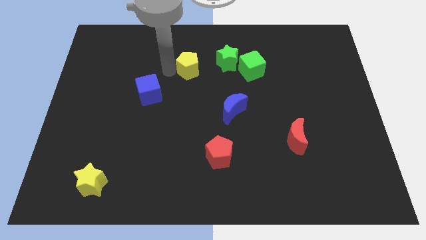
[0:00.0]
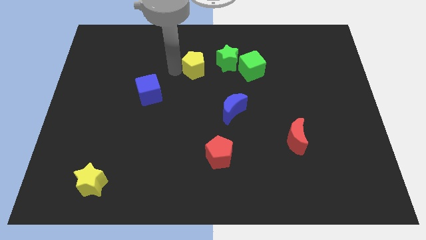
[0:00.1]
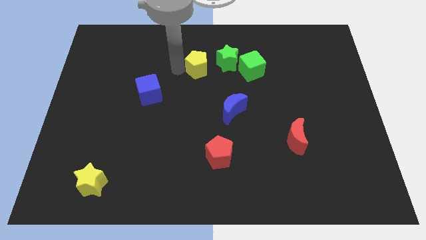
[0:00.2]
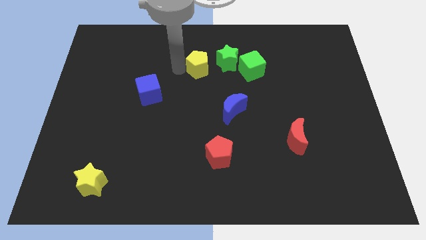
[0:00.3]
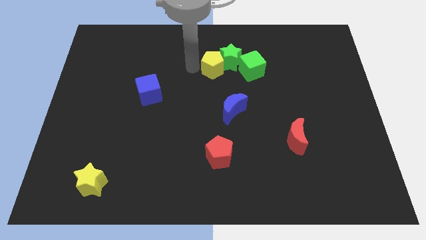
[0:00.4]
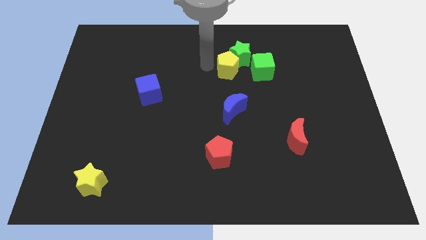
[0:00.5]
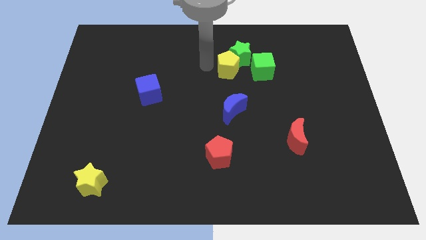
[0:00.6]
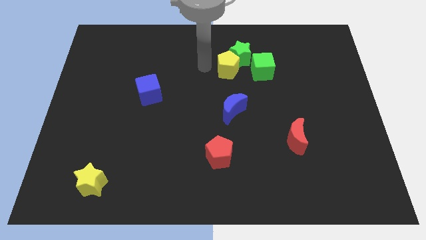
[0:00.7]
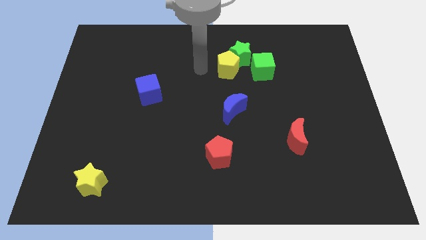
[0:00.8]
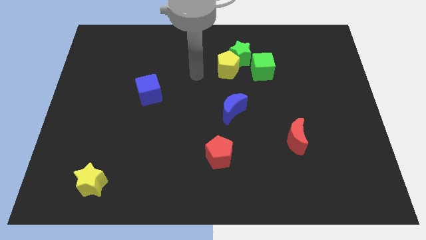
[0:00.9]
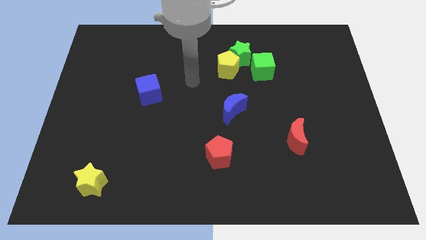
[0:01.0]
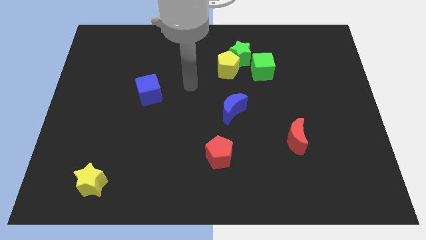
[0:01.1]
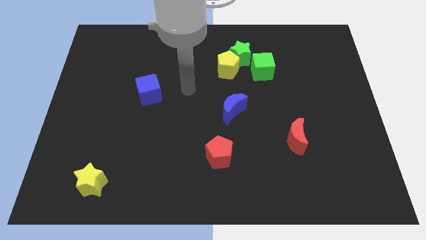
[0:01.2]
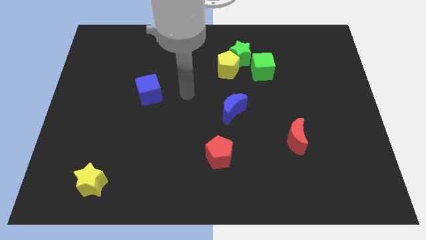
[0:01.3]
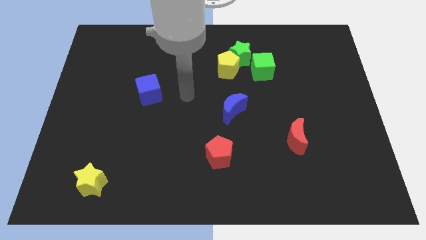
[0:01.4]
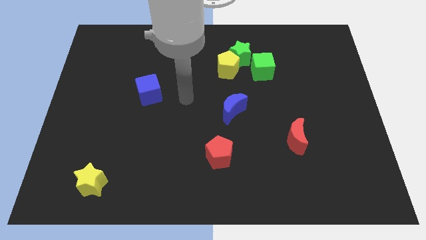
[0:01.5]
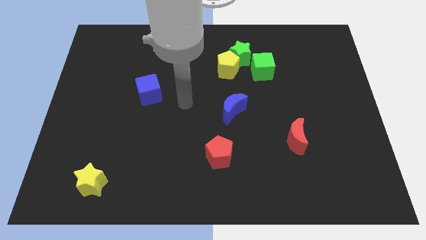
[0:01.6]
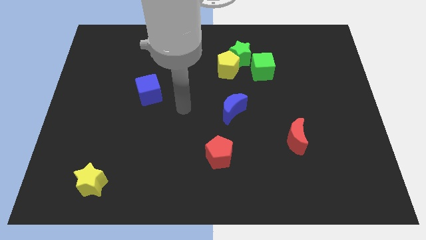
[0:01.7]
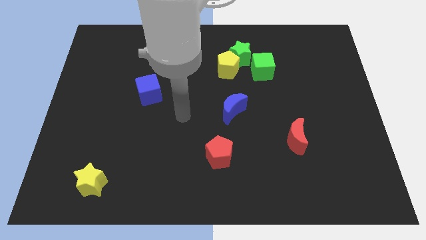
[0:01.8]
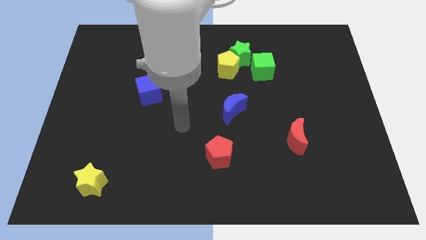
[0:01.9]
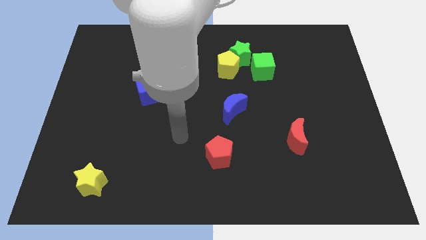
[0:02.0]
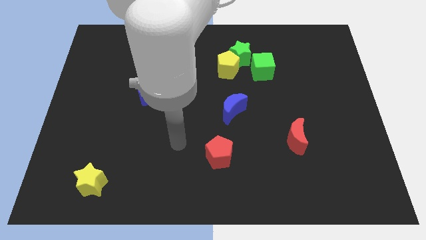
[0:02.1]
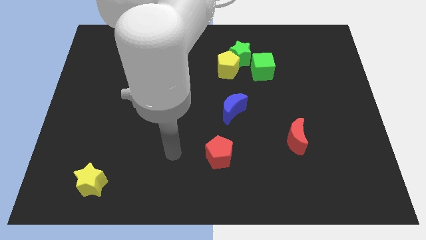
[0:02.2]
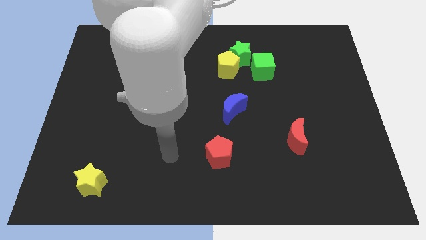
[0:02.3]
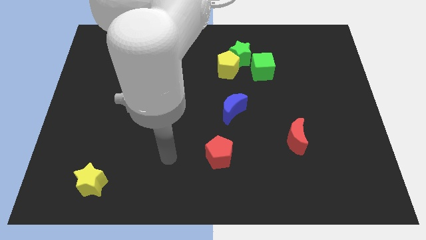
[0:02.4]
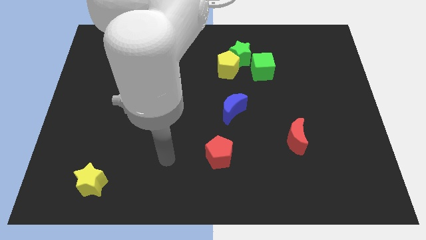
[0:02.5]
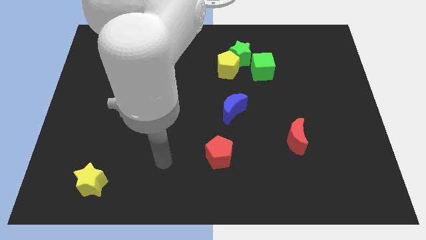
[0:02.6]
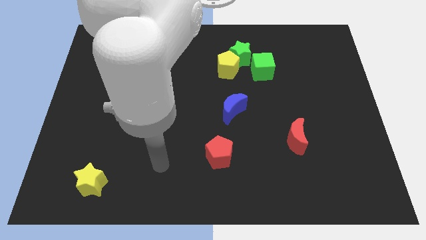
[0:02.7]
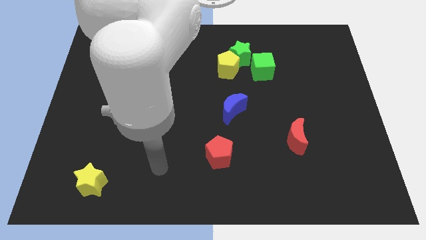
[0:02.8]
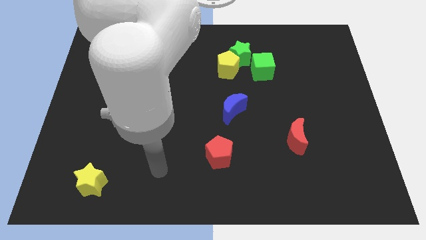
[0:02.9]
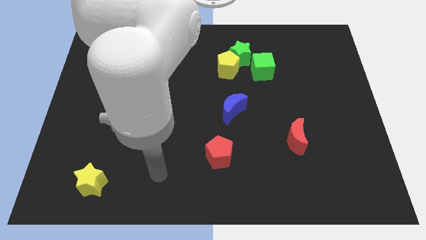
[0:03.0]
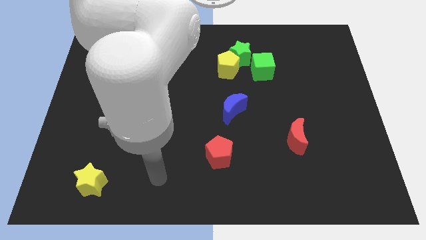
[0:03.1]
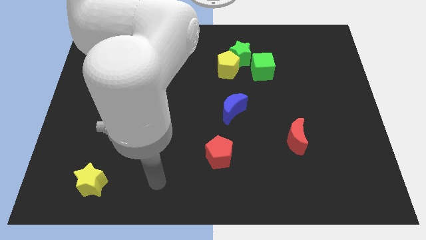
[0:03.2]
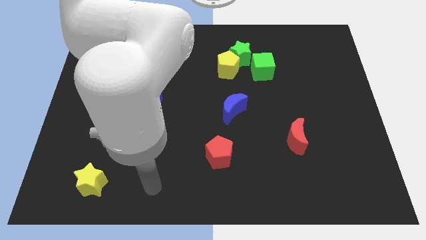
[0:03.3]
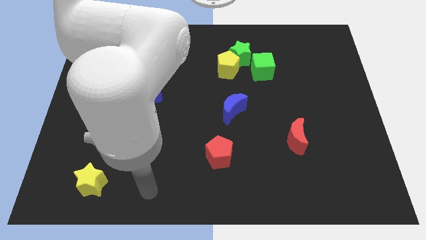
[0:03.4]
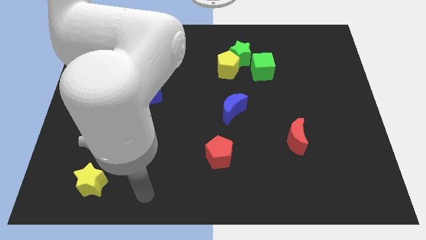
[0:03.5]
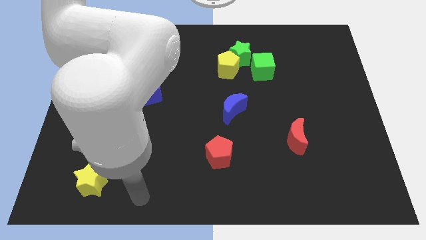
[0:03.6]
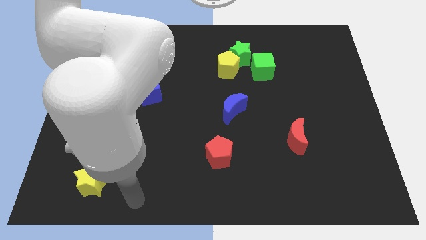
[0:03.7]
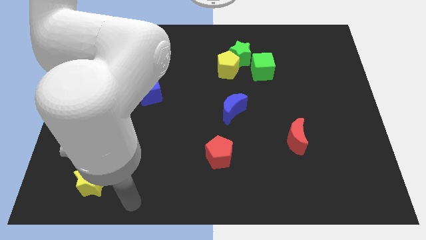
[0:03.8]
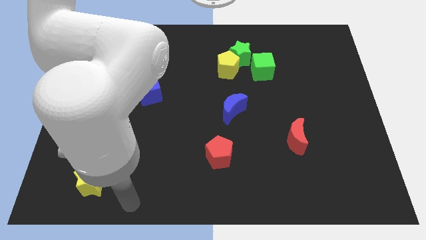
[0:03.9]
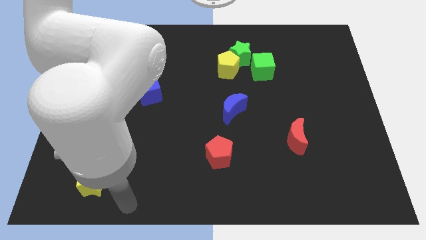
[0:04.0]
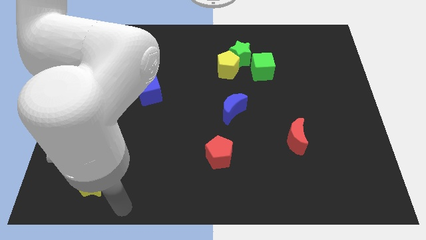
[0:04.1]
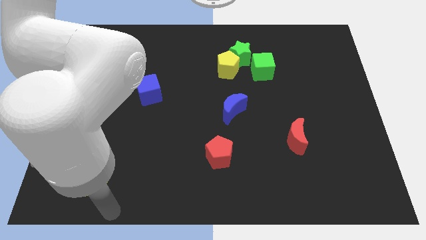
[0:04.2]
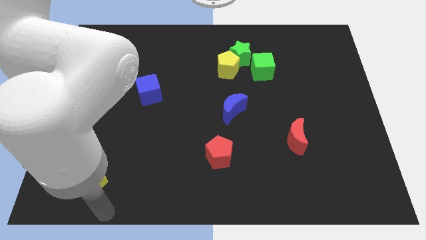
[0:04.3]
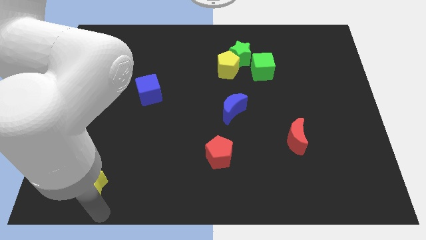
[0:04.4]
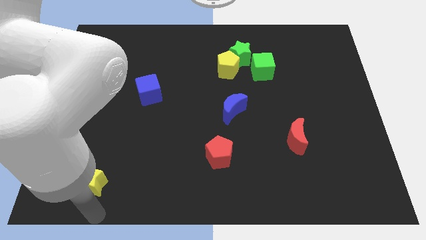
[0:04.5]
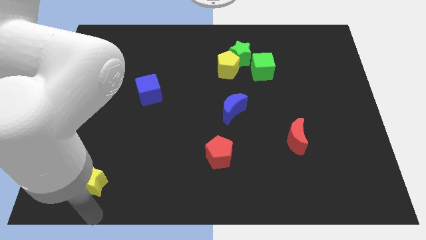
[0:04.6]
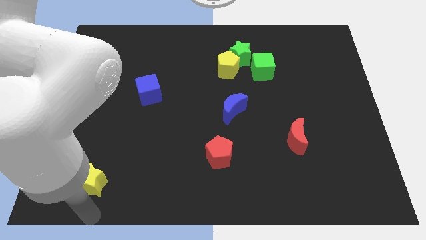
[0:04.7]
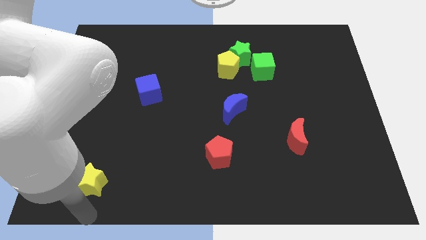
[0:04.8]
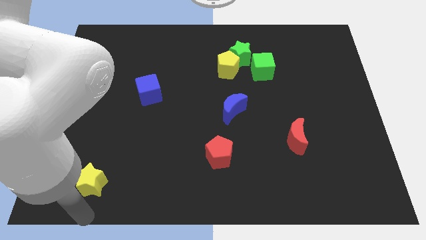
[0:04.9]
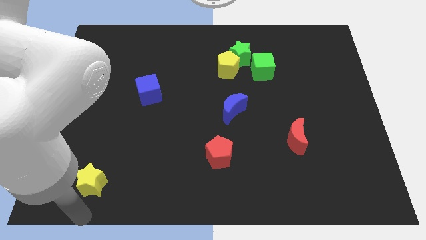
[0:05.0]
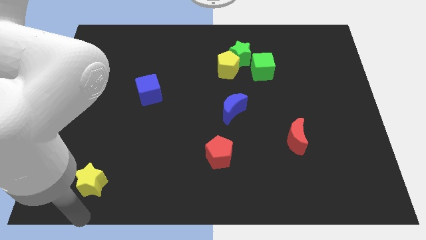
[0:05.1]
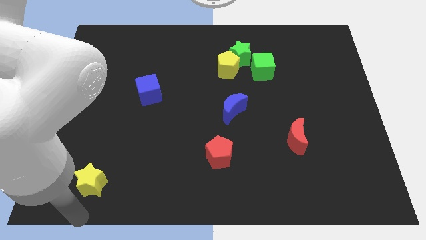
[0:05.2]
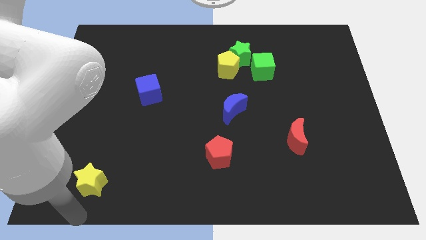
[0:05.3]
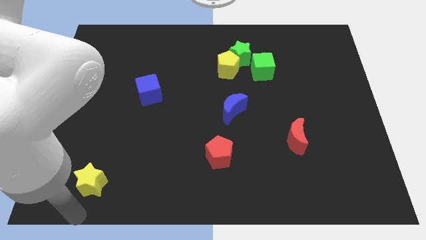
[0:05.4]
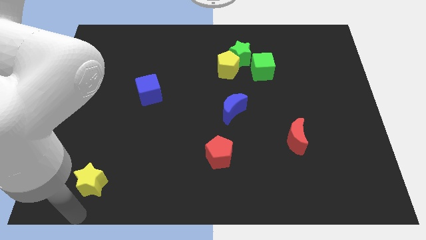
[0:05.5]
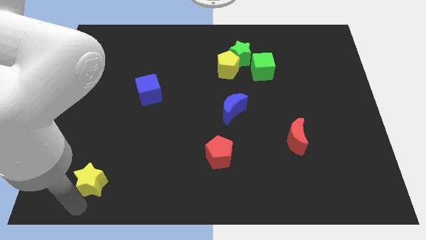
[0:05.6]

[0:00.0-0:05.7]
push the yellow pentagon into the green star and green cube

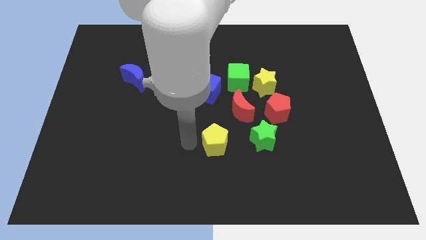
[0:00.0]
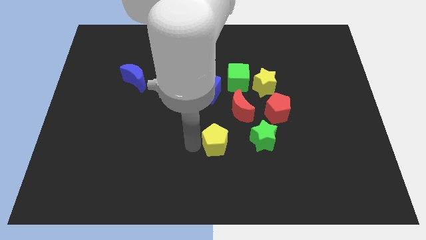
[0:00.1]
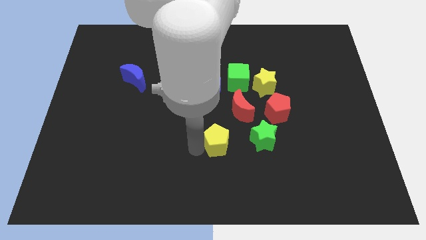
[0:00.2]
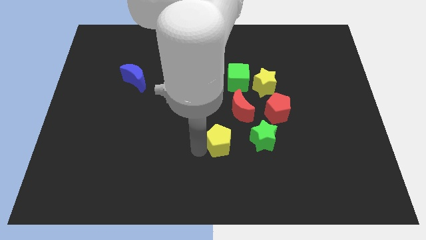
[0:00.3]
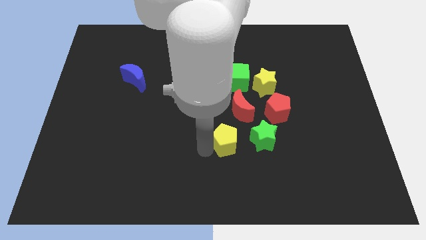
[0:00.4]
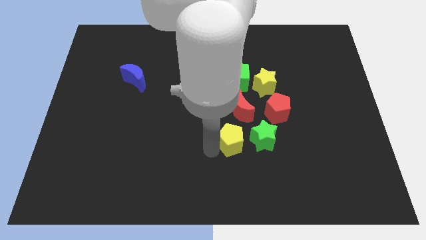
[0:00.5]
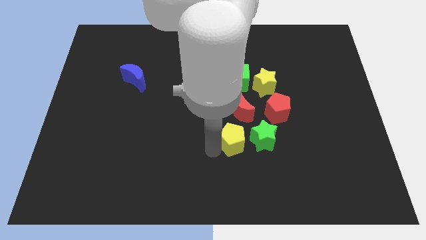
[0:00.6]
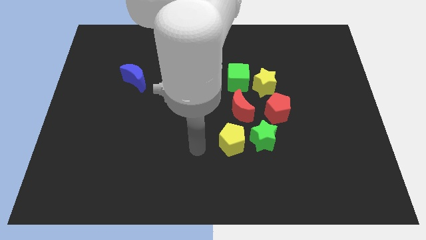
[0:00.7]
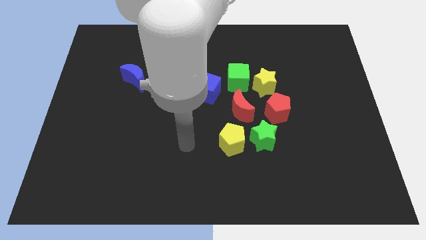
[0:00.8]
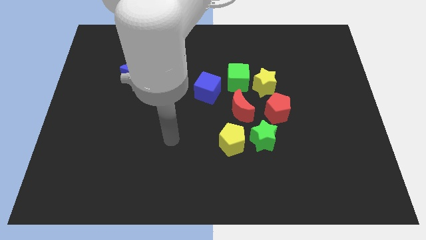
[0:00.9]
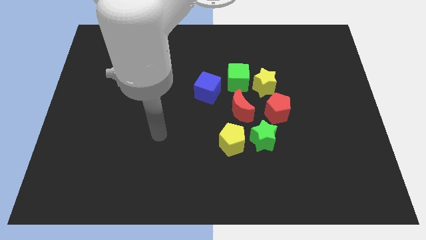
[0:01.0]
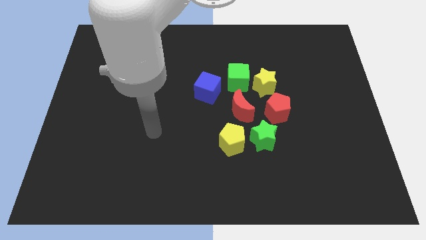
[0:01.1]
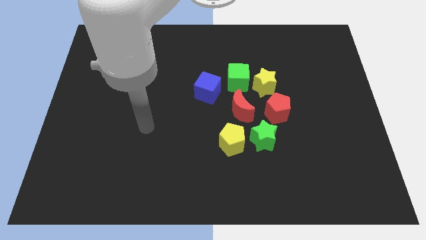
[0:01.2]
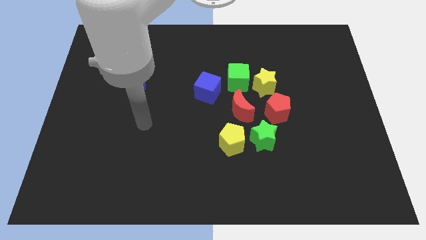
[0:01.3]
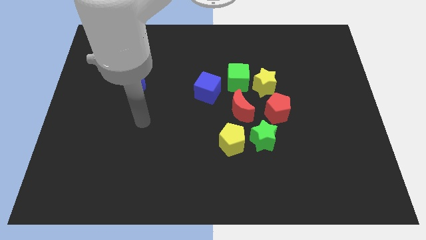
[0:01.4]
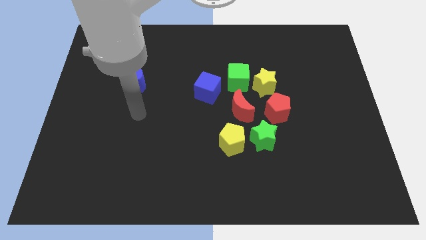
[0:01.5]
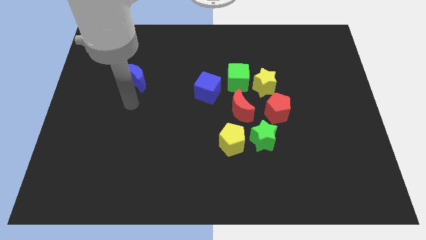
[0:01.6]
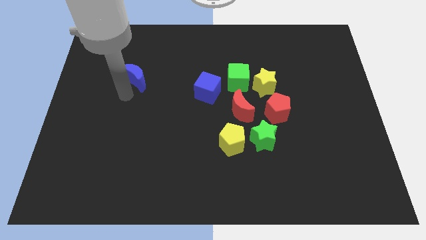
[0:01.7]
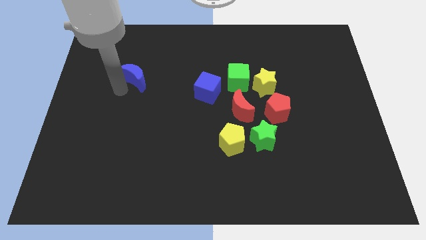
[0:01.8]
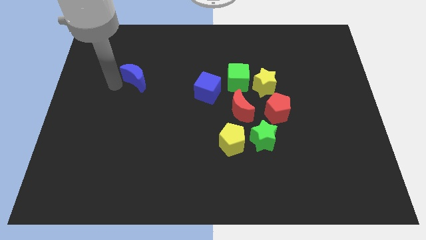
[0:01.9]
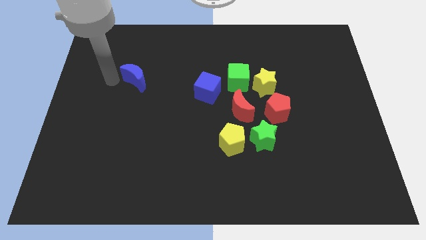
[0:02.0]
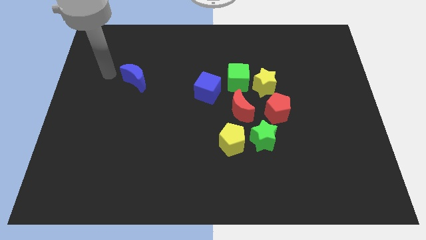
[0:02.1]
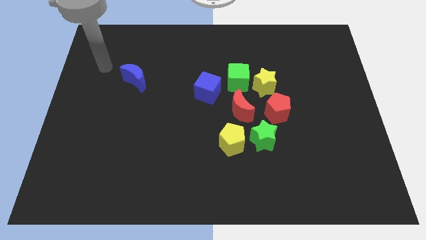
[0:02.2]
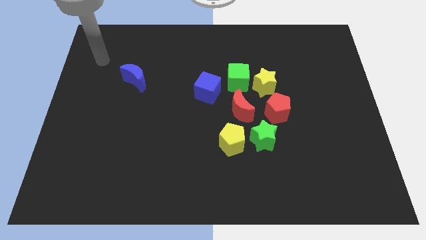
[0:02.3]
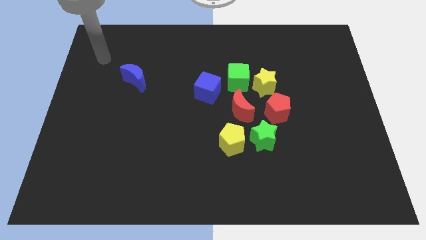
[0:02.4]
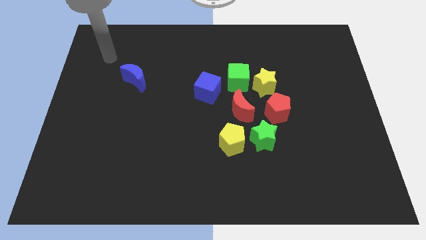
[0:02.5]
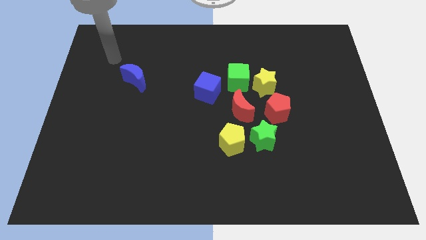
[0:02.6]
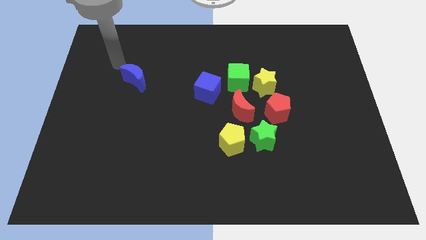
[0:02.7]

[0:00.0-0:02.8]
push the yellow pentagon towards the of the green star

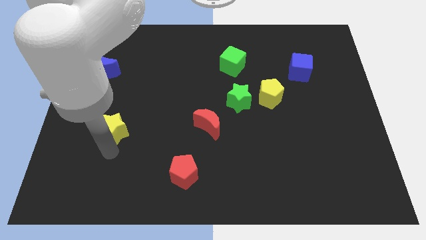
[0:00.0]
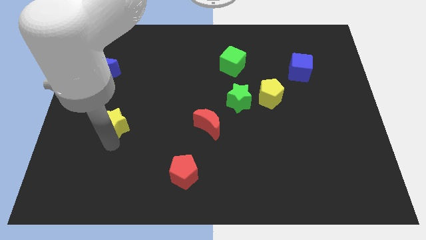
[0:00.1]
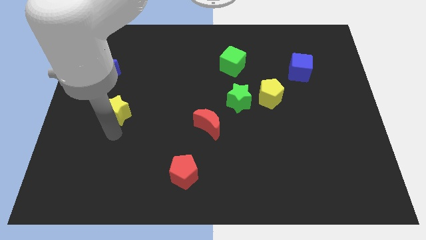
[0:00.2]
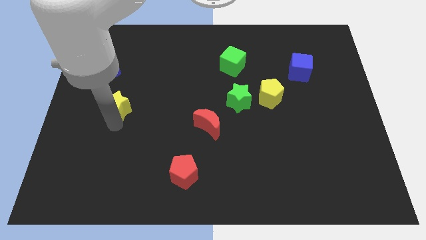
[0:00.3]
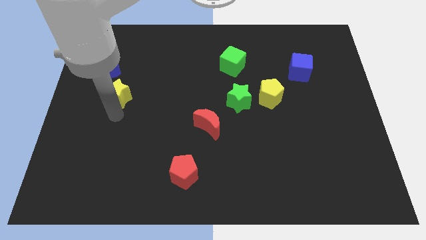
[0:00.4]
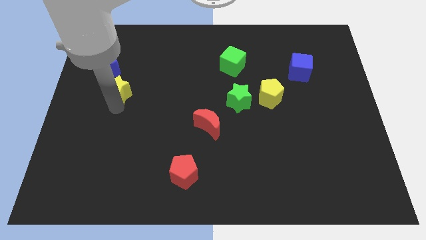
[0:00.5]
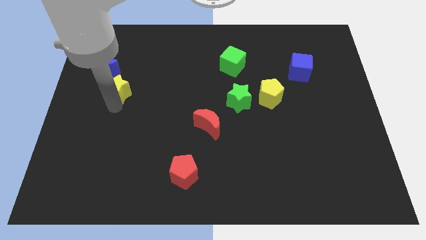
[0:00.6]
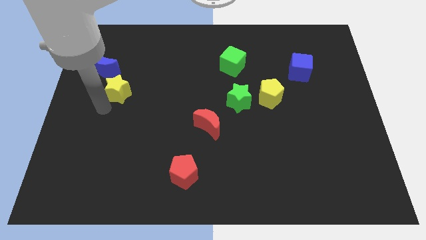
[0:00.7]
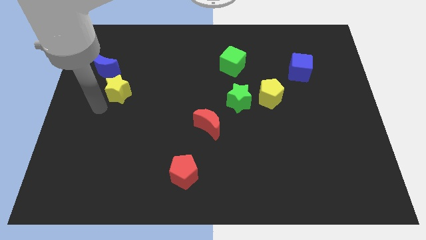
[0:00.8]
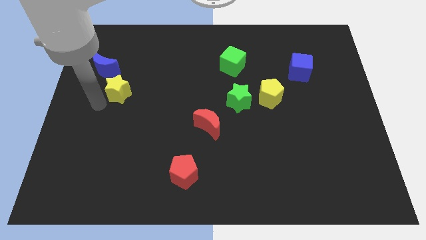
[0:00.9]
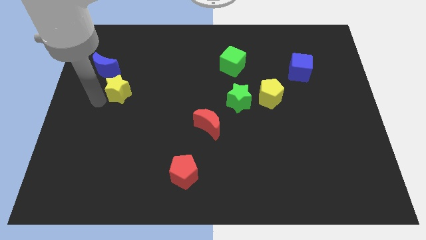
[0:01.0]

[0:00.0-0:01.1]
place the yellow star below the blue moon
